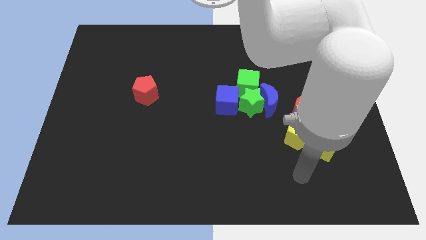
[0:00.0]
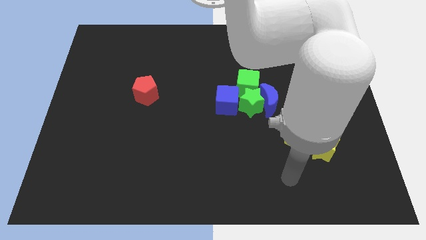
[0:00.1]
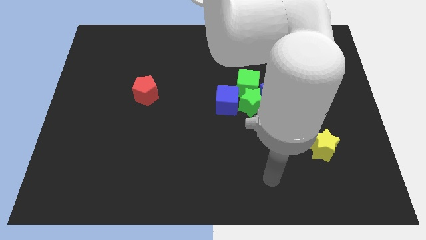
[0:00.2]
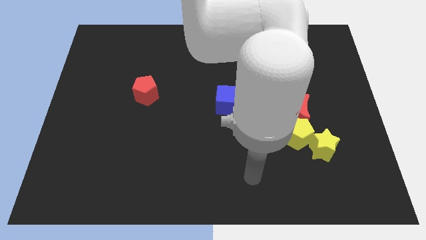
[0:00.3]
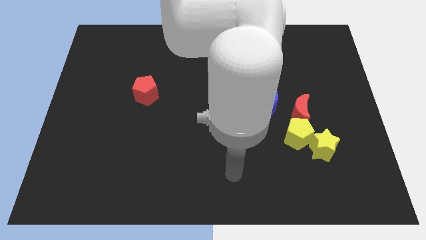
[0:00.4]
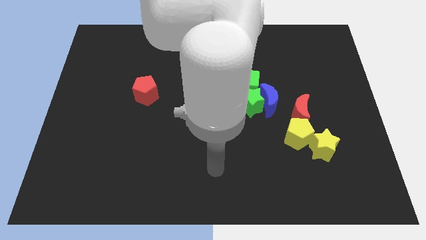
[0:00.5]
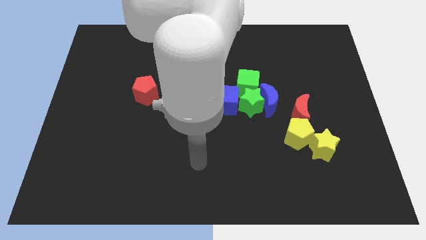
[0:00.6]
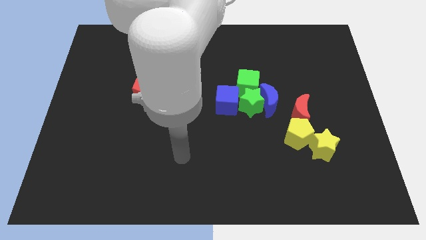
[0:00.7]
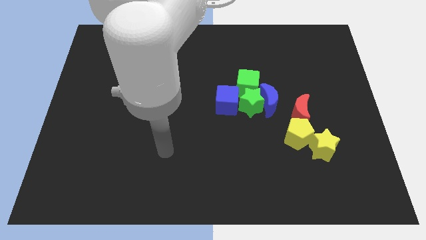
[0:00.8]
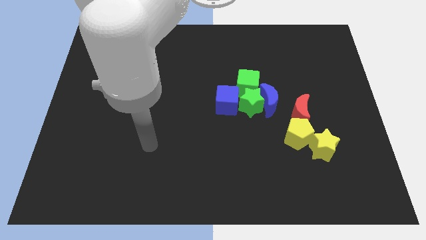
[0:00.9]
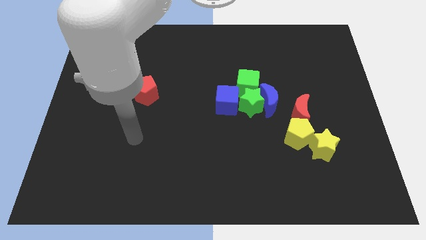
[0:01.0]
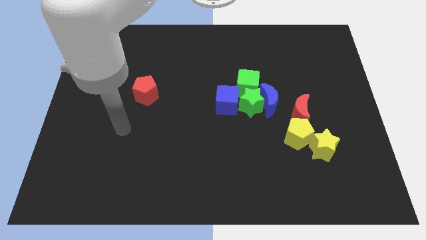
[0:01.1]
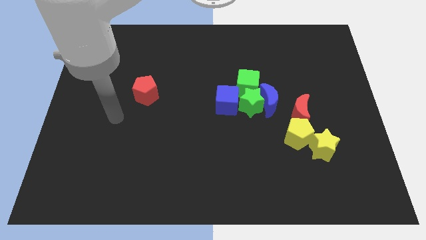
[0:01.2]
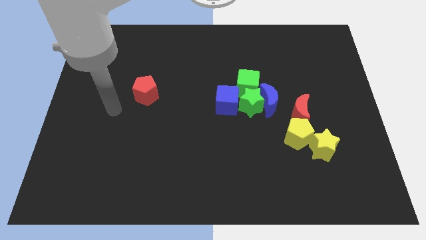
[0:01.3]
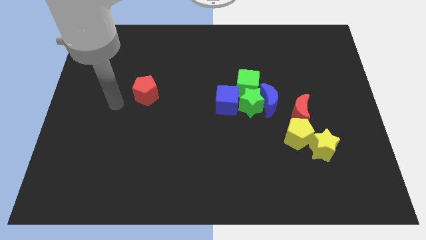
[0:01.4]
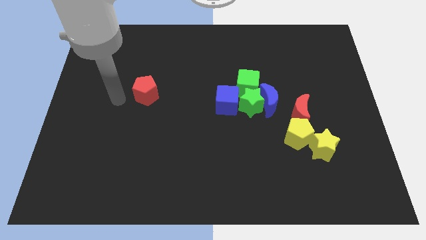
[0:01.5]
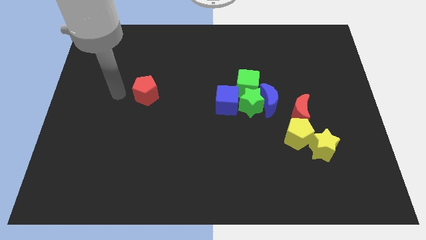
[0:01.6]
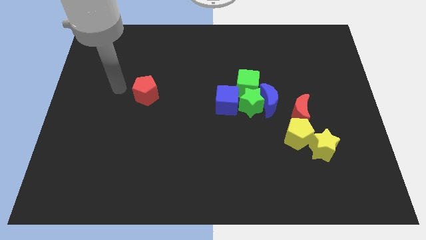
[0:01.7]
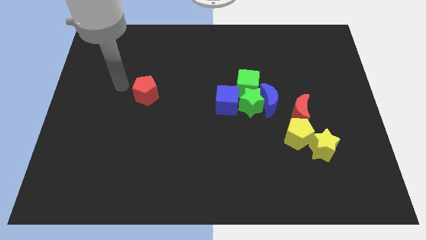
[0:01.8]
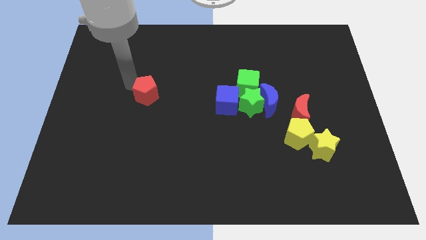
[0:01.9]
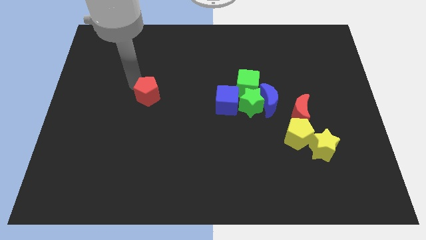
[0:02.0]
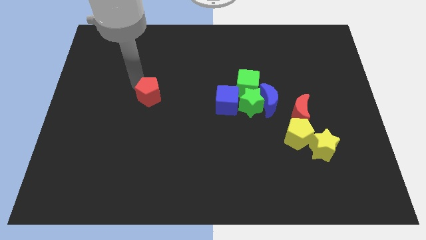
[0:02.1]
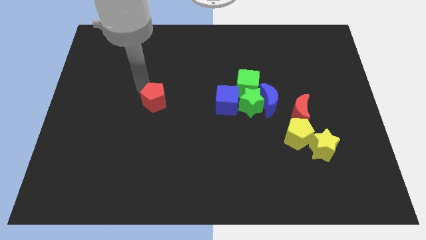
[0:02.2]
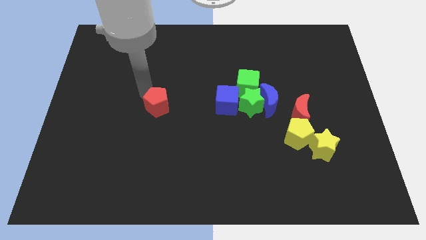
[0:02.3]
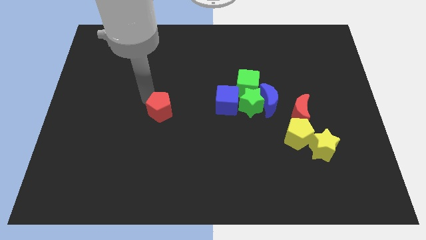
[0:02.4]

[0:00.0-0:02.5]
move the red pentagon to the left of the blue cube

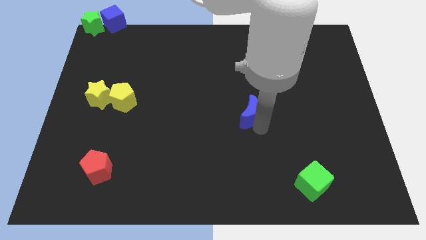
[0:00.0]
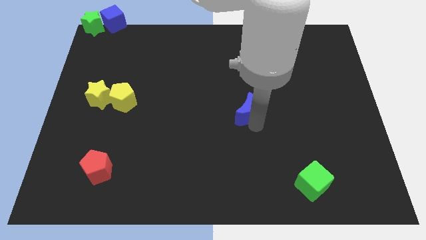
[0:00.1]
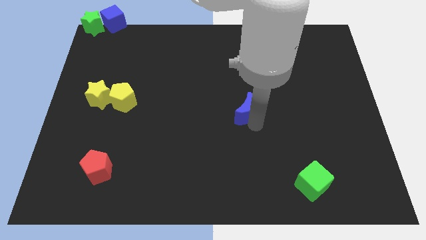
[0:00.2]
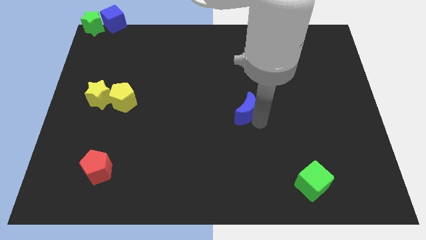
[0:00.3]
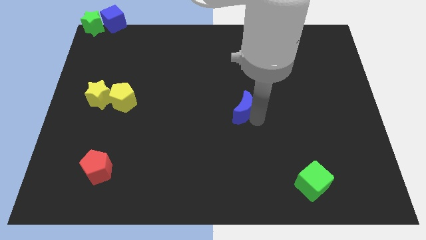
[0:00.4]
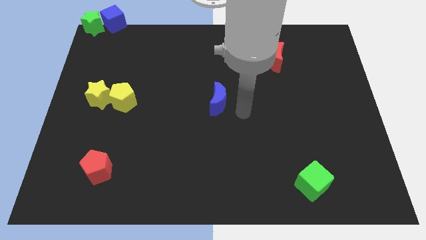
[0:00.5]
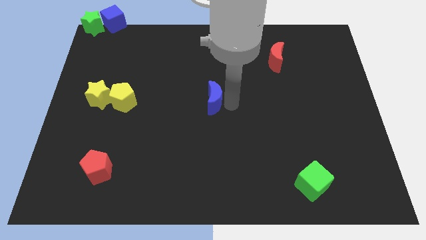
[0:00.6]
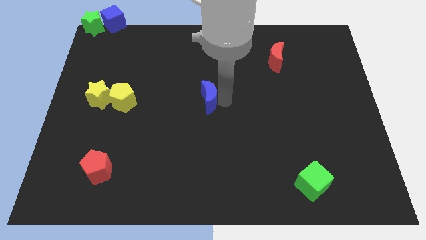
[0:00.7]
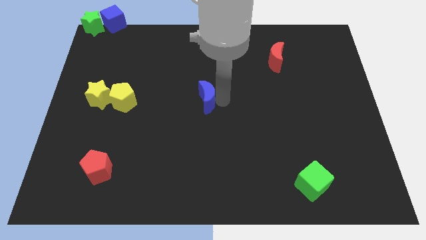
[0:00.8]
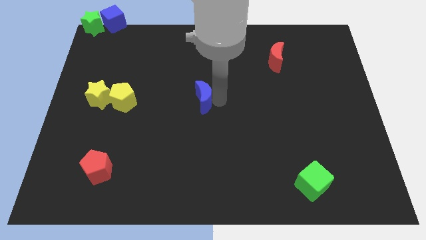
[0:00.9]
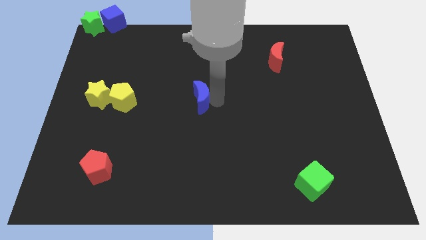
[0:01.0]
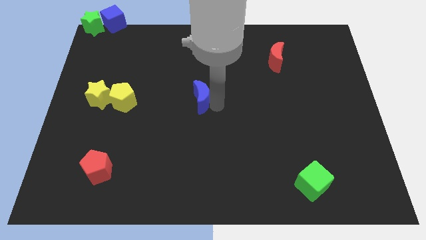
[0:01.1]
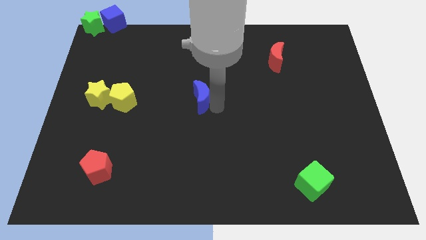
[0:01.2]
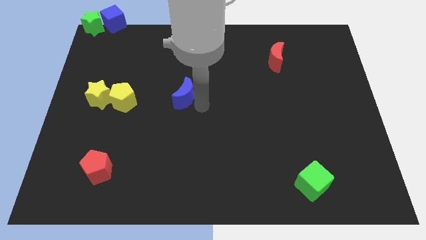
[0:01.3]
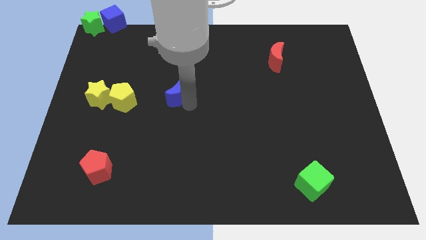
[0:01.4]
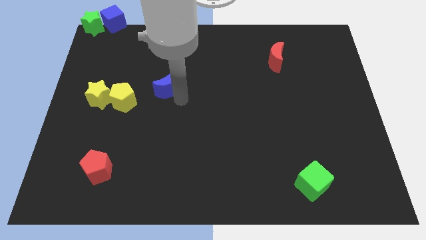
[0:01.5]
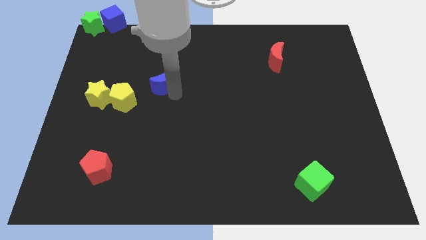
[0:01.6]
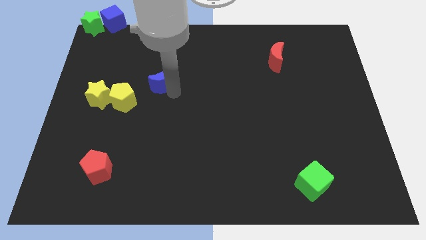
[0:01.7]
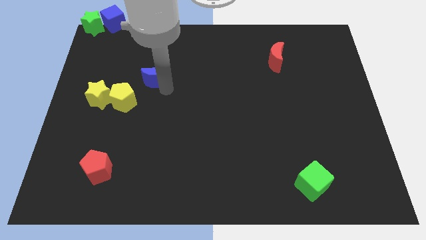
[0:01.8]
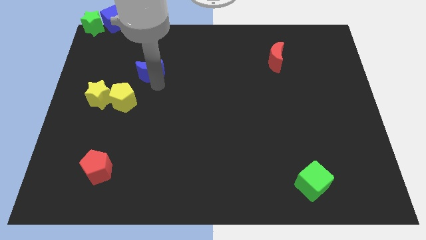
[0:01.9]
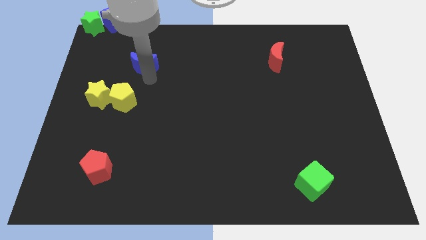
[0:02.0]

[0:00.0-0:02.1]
move the blue crescent towards the top left

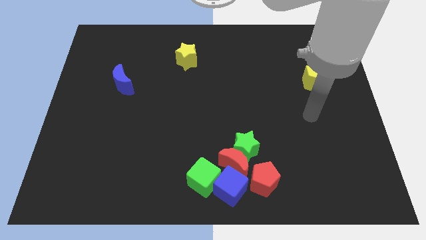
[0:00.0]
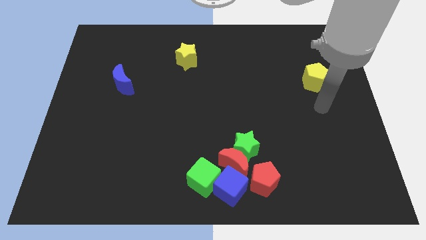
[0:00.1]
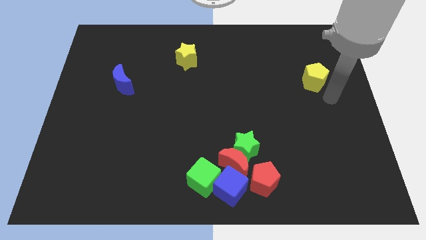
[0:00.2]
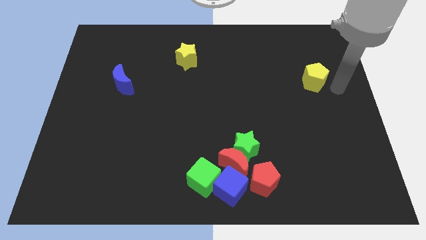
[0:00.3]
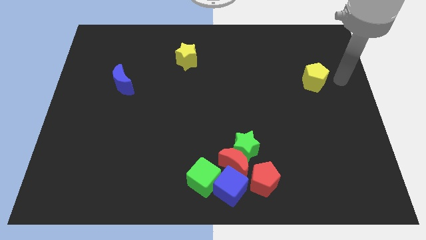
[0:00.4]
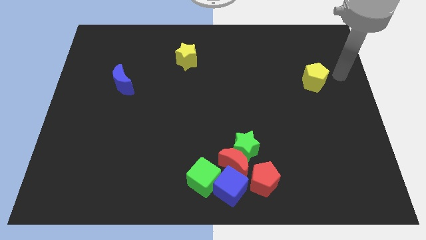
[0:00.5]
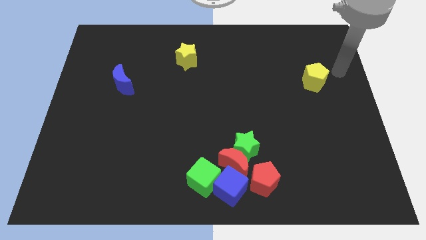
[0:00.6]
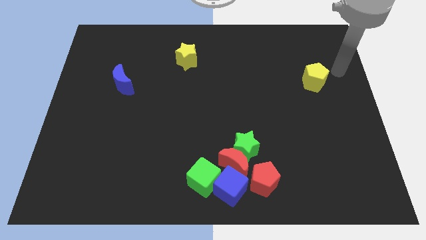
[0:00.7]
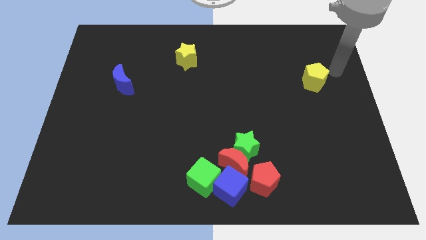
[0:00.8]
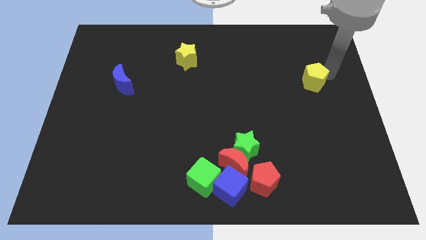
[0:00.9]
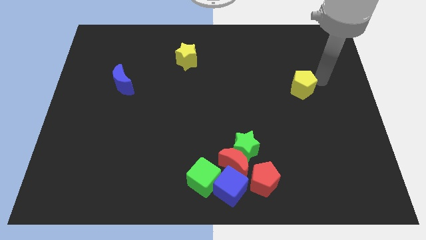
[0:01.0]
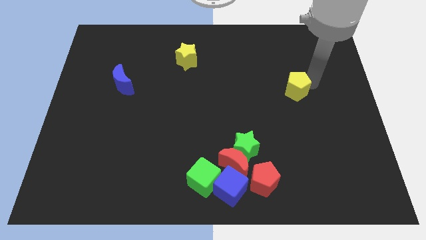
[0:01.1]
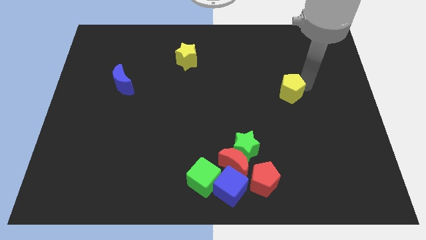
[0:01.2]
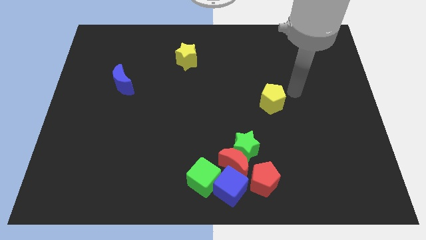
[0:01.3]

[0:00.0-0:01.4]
move the yellow pentagon to the bottom center of the board

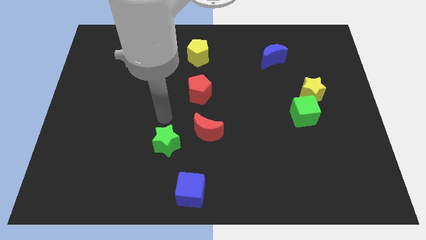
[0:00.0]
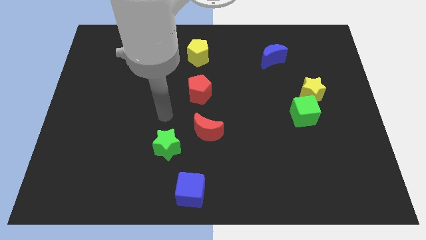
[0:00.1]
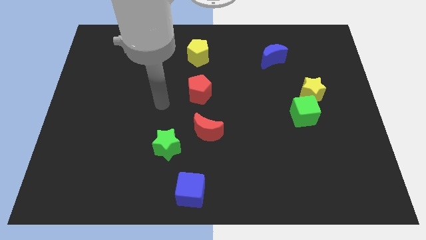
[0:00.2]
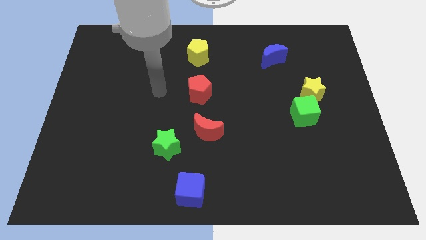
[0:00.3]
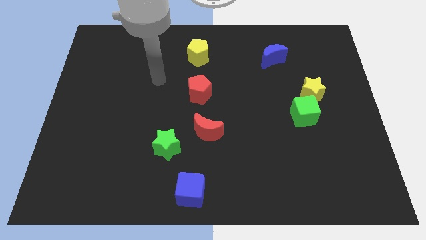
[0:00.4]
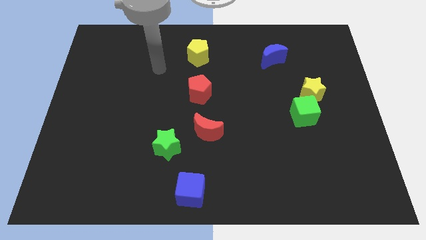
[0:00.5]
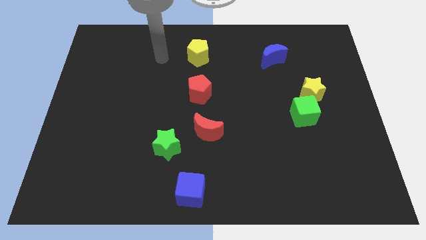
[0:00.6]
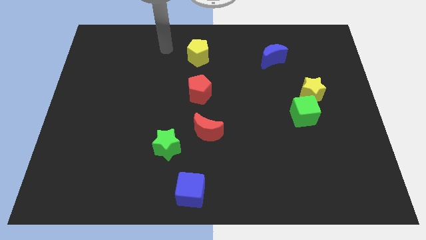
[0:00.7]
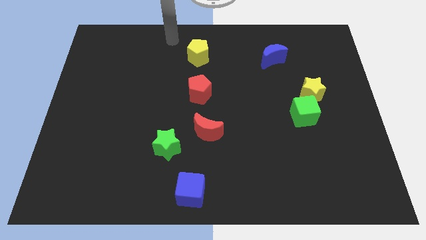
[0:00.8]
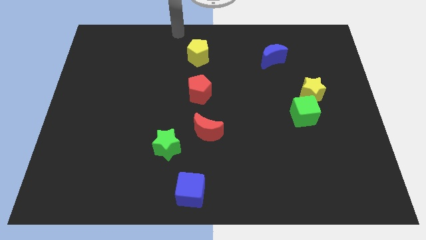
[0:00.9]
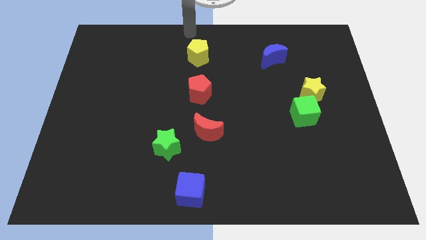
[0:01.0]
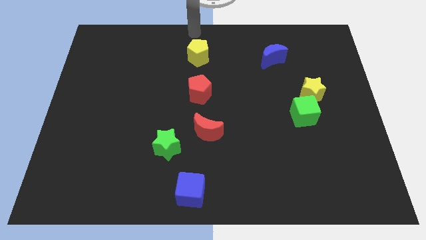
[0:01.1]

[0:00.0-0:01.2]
move your arm away from the green star

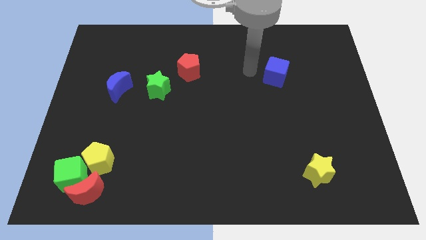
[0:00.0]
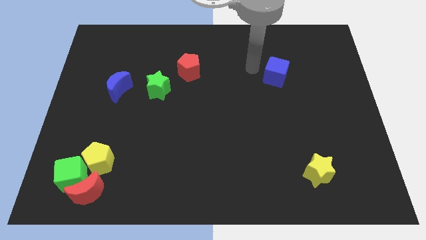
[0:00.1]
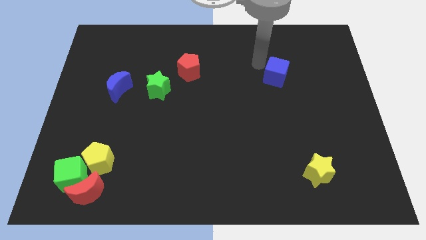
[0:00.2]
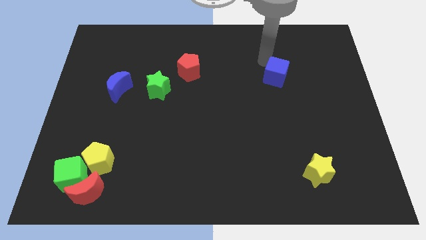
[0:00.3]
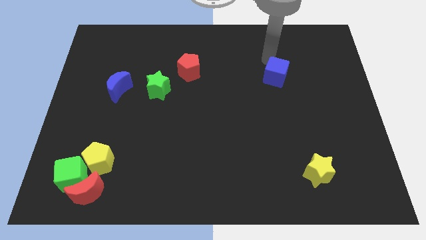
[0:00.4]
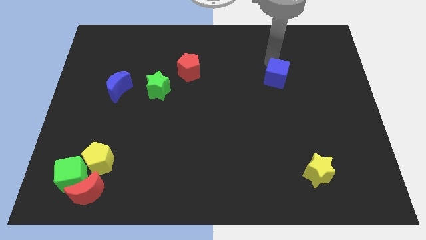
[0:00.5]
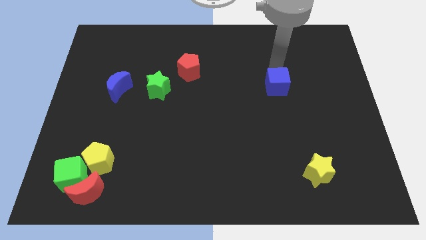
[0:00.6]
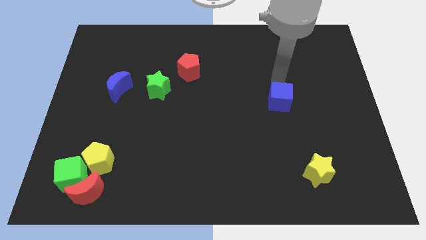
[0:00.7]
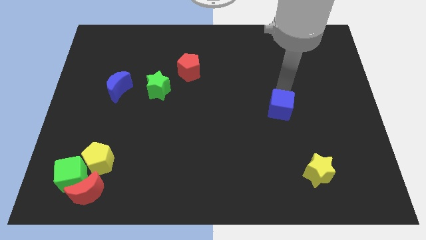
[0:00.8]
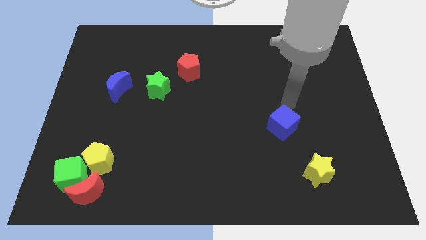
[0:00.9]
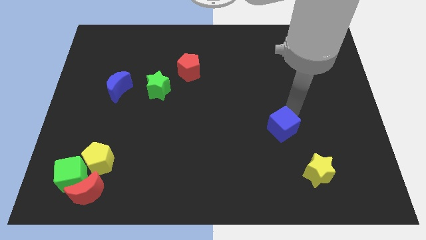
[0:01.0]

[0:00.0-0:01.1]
push the blue cube towards the yellow star

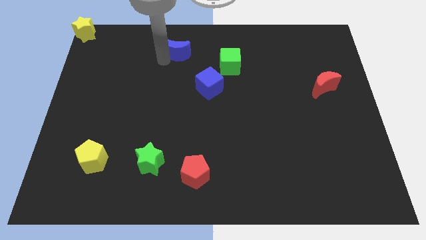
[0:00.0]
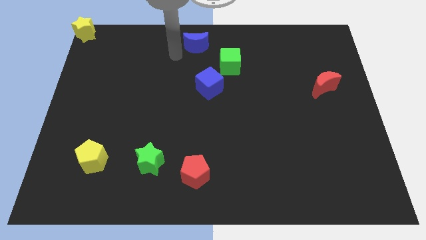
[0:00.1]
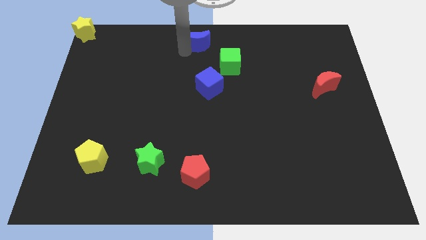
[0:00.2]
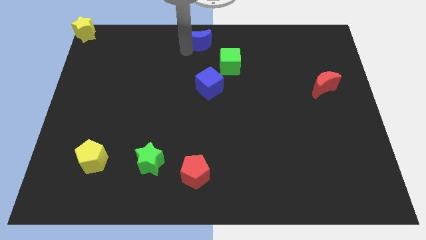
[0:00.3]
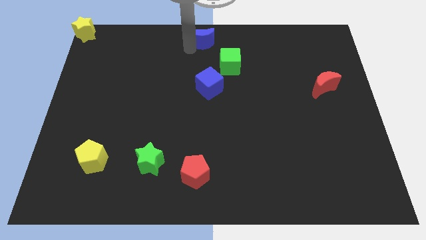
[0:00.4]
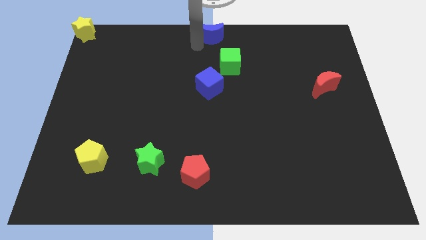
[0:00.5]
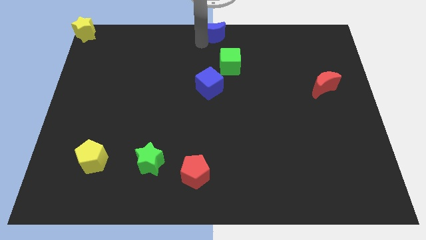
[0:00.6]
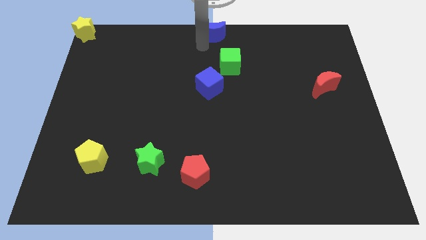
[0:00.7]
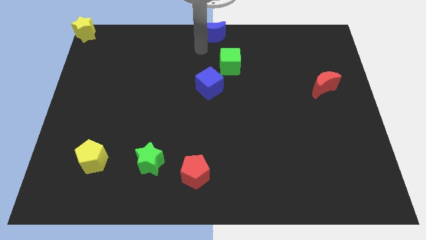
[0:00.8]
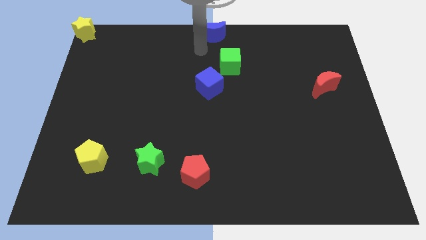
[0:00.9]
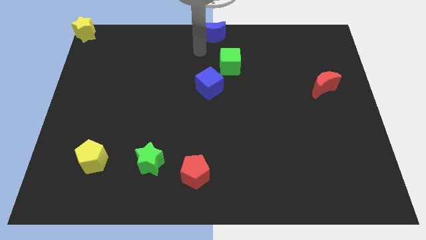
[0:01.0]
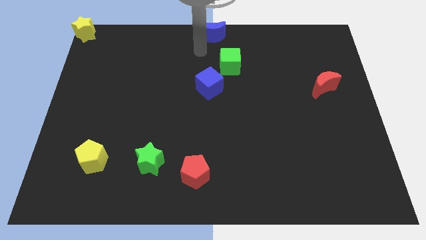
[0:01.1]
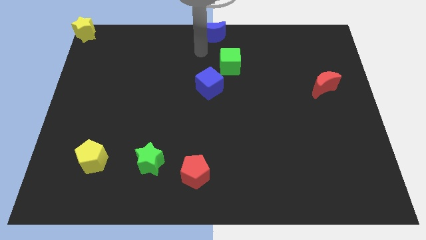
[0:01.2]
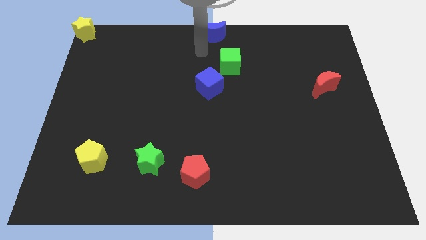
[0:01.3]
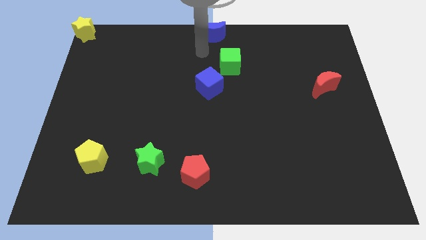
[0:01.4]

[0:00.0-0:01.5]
place the blue moon above the green cube